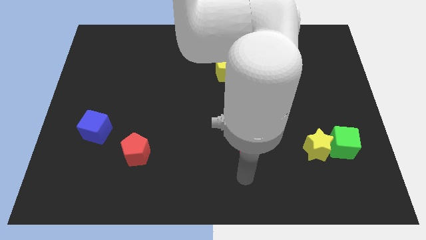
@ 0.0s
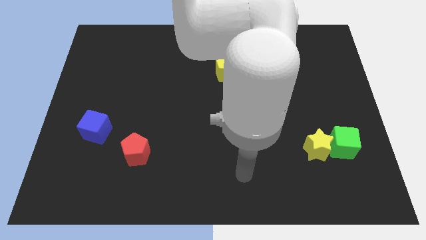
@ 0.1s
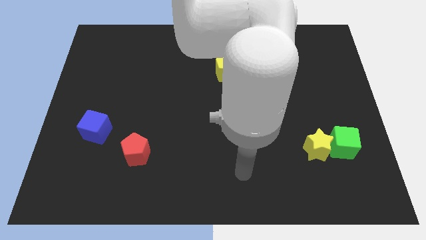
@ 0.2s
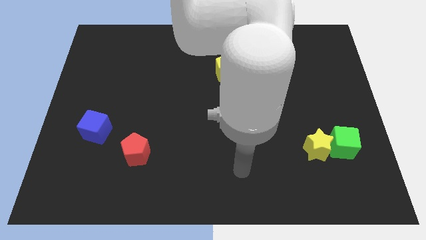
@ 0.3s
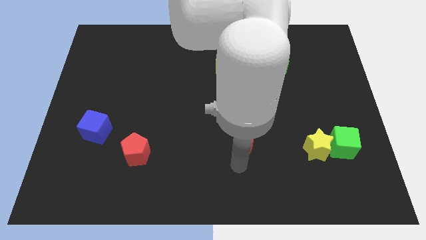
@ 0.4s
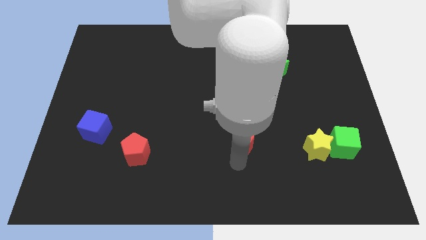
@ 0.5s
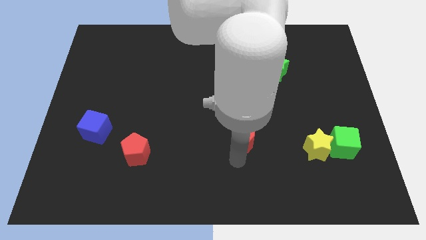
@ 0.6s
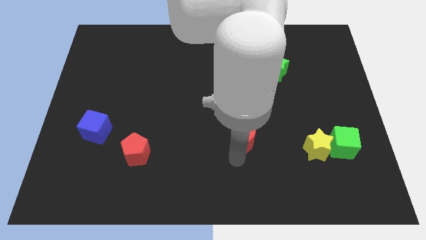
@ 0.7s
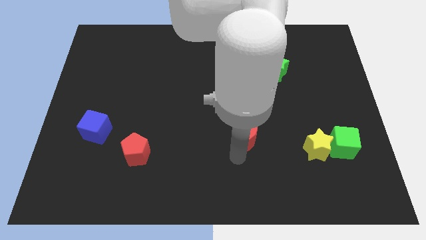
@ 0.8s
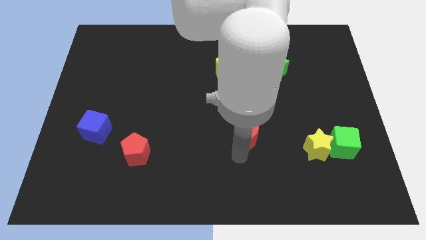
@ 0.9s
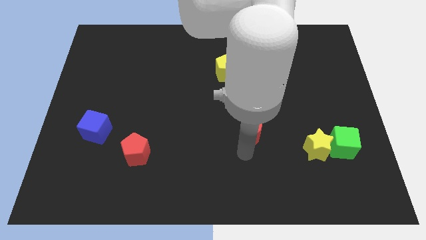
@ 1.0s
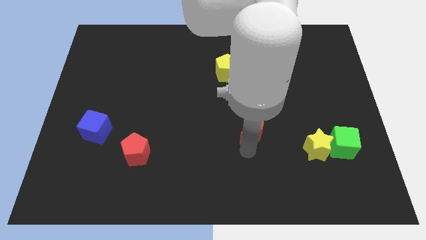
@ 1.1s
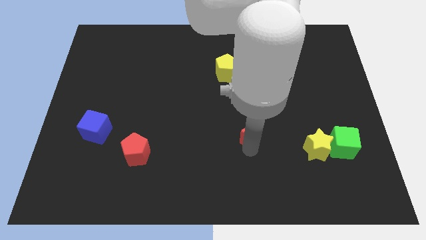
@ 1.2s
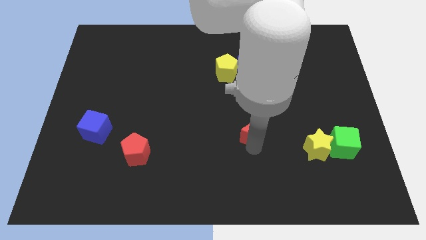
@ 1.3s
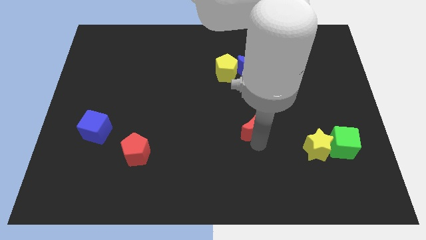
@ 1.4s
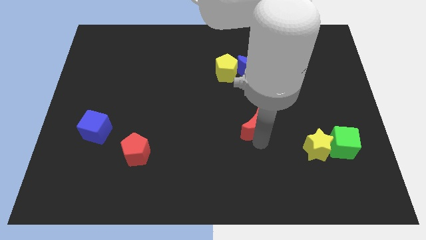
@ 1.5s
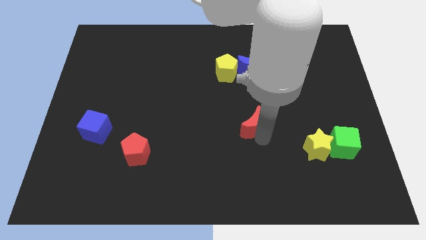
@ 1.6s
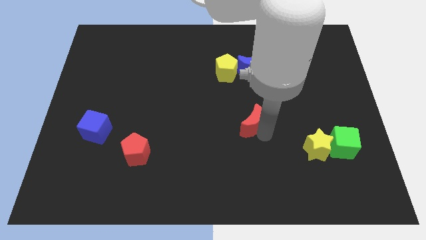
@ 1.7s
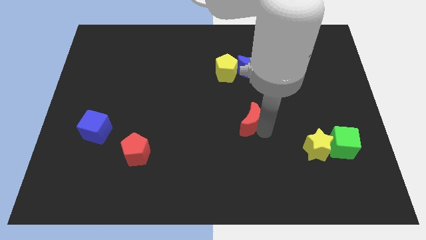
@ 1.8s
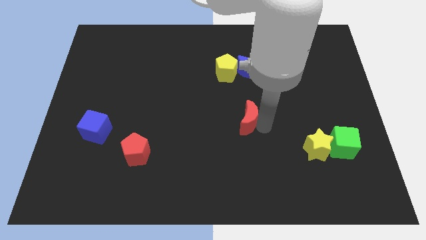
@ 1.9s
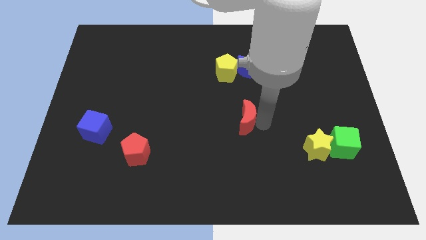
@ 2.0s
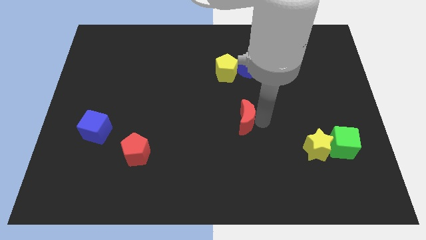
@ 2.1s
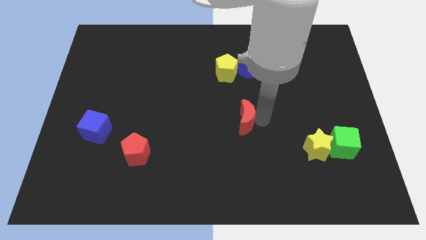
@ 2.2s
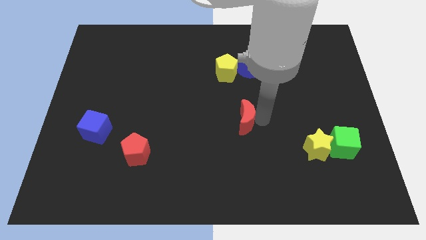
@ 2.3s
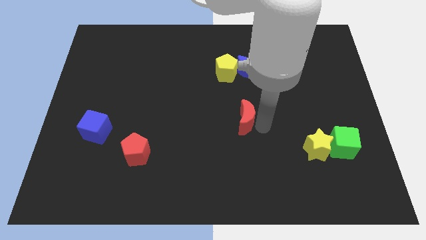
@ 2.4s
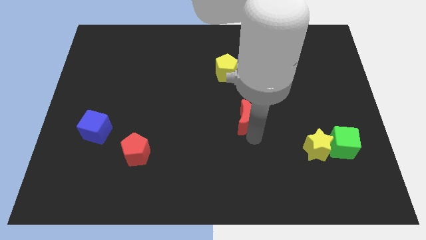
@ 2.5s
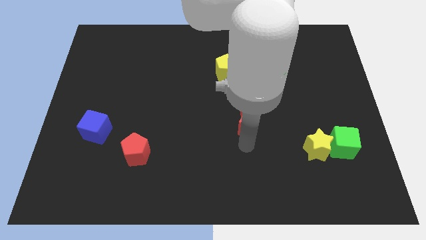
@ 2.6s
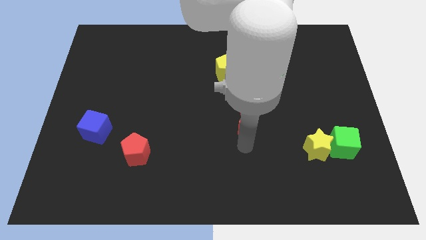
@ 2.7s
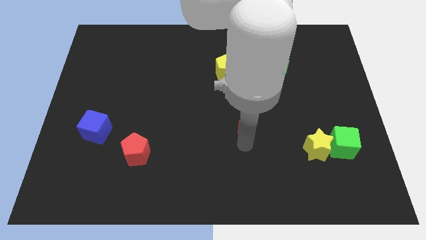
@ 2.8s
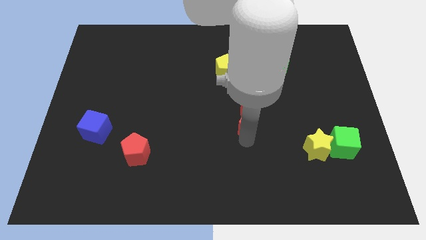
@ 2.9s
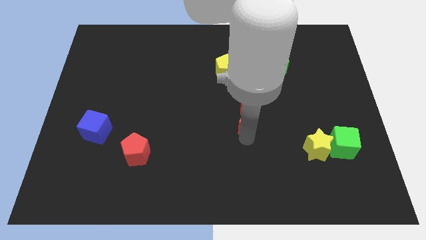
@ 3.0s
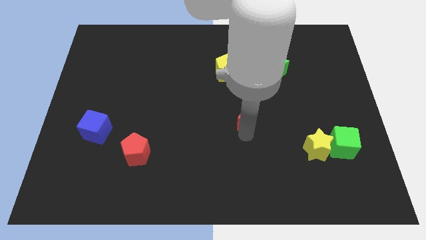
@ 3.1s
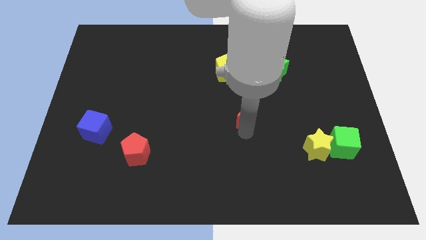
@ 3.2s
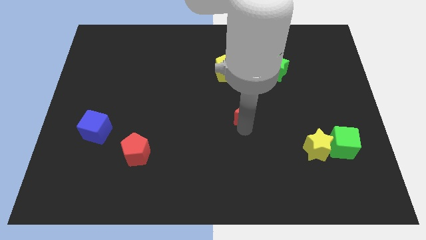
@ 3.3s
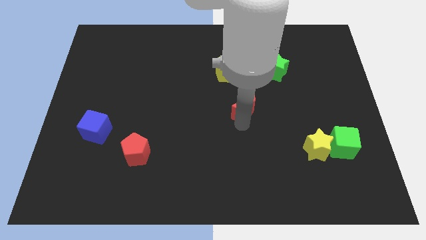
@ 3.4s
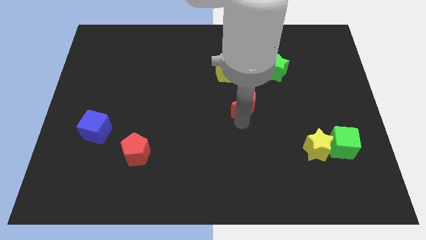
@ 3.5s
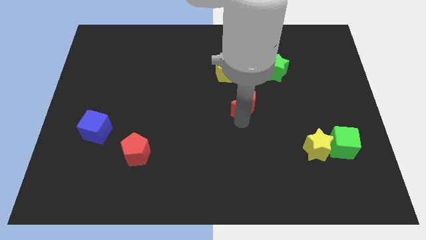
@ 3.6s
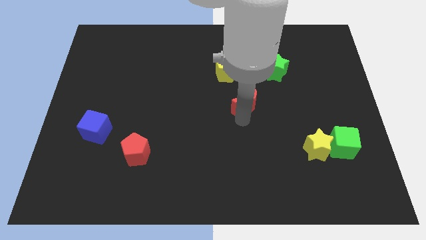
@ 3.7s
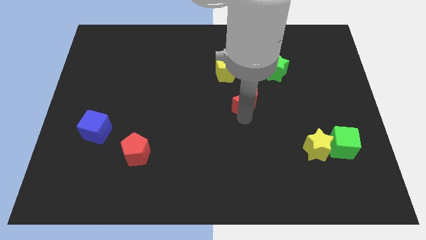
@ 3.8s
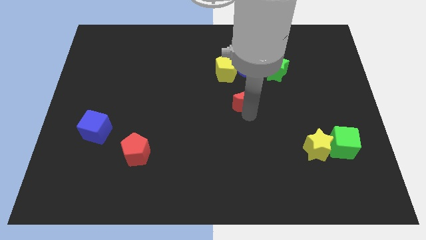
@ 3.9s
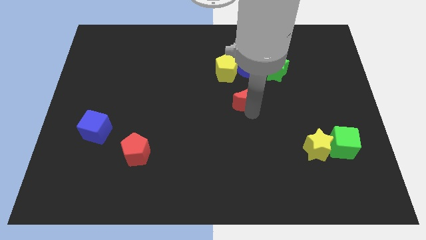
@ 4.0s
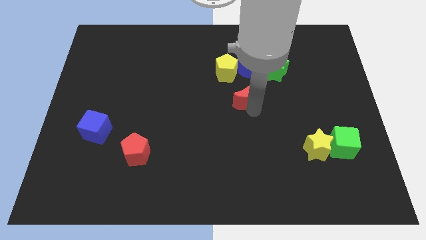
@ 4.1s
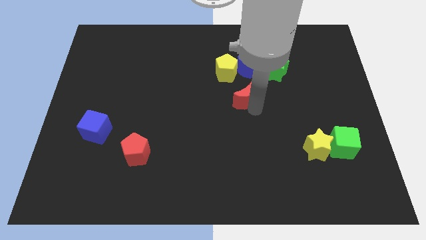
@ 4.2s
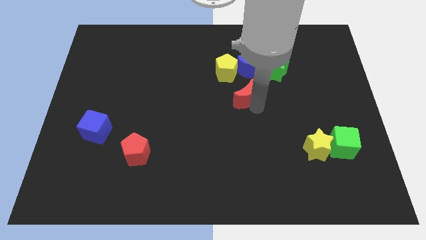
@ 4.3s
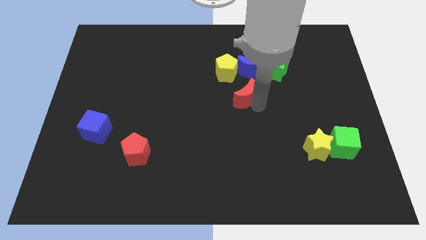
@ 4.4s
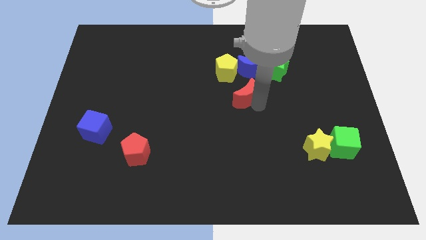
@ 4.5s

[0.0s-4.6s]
push the red moon to the bottom of the blue crescent

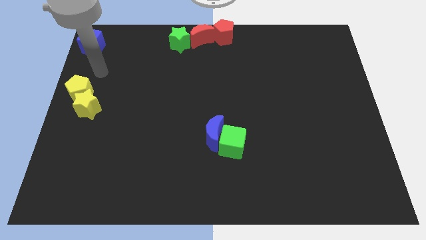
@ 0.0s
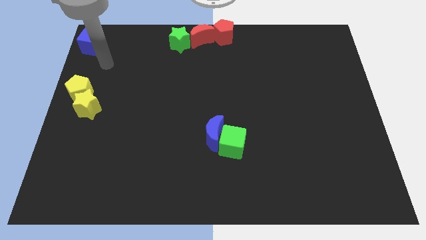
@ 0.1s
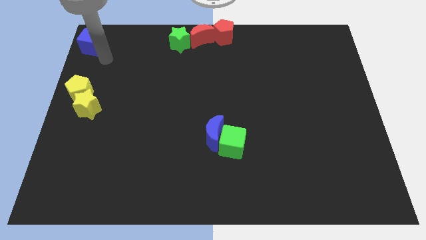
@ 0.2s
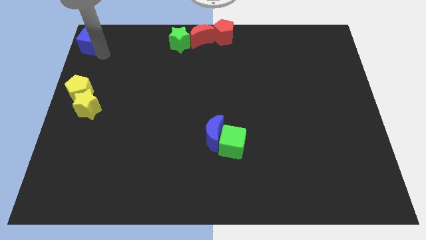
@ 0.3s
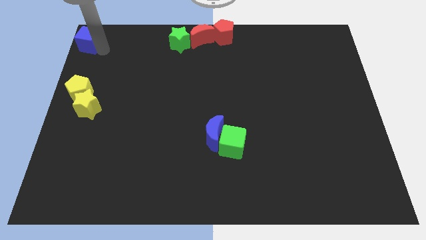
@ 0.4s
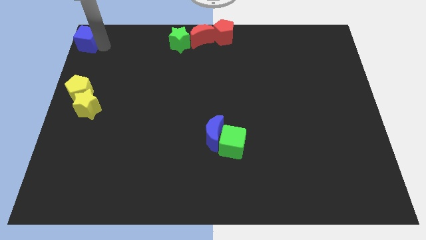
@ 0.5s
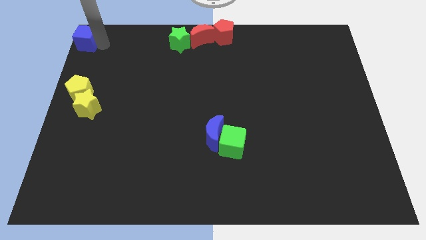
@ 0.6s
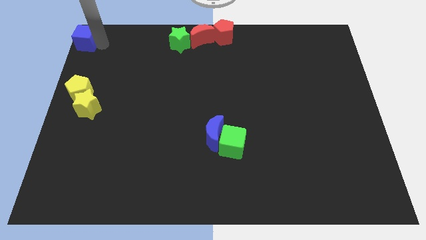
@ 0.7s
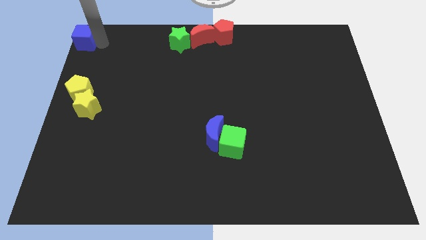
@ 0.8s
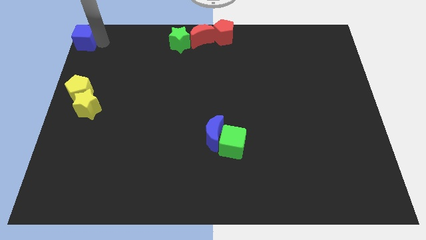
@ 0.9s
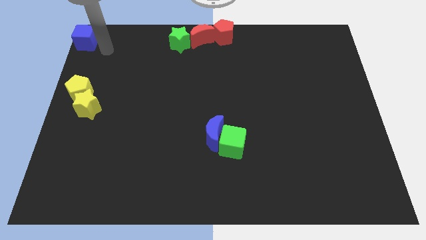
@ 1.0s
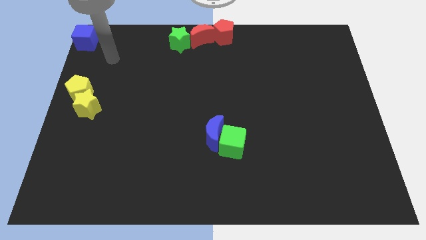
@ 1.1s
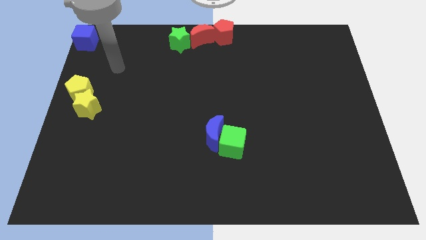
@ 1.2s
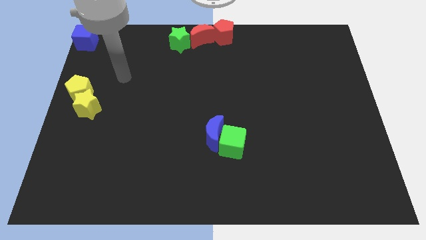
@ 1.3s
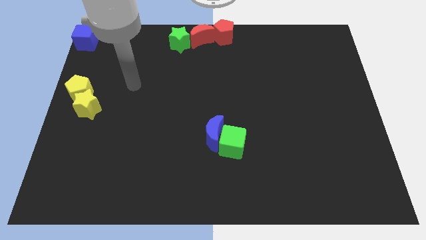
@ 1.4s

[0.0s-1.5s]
move the blue cube to the top left corner of the board

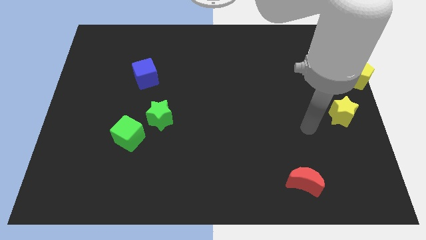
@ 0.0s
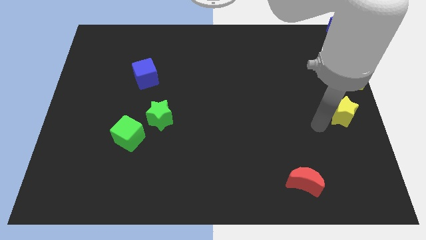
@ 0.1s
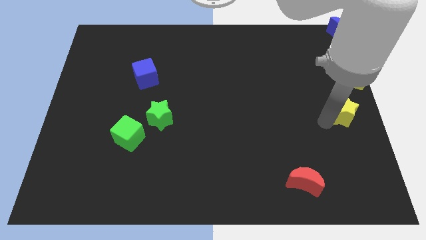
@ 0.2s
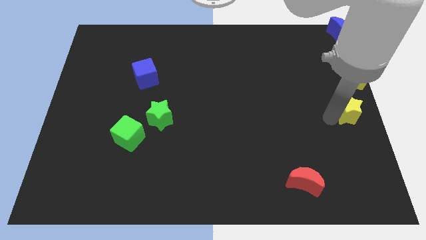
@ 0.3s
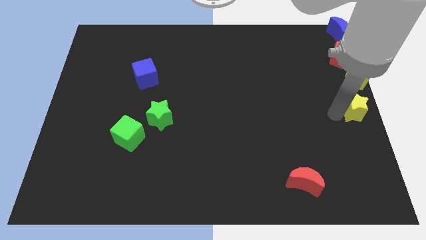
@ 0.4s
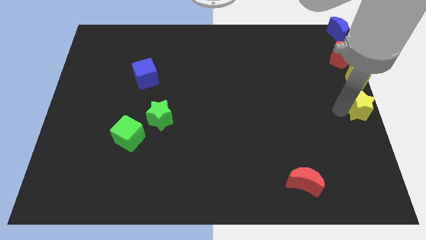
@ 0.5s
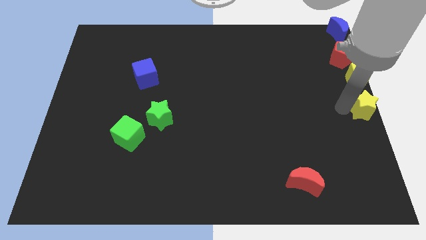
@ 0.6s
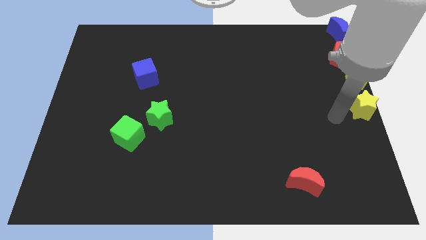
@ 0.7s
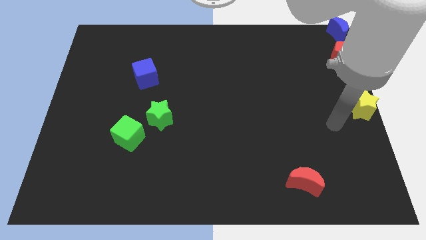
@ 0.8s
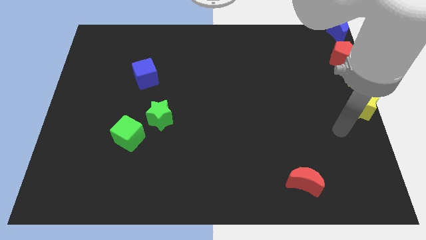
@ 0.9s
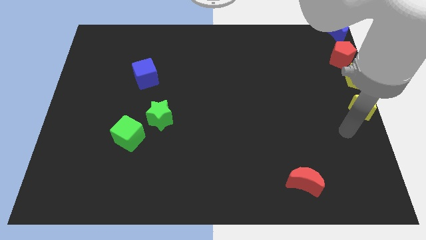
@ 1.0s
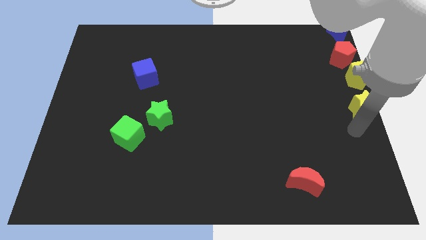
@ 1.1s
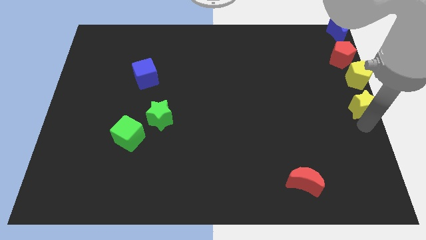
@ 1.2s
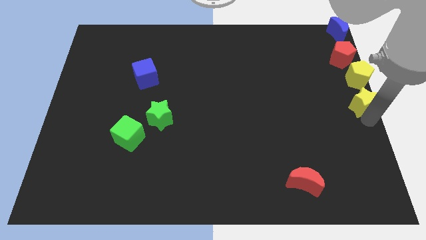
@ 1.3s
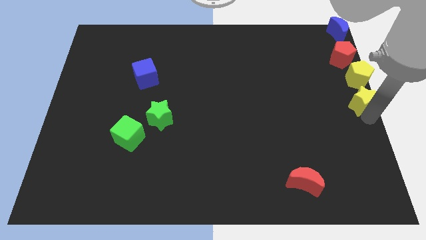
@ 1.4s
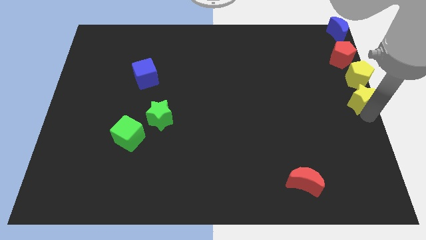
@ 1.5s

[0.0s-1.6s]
push the yellow star below the yellow penatgon

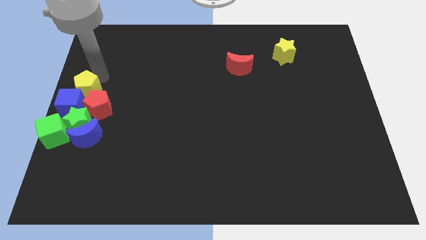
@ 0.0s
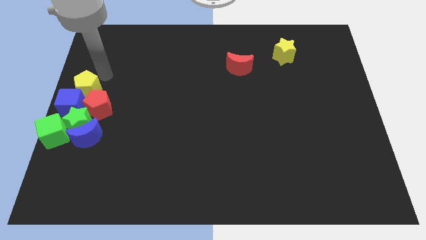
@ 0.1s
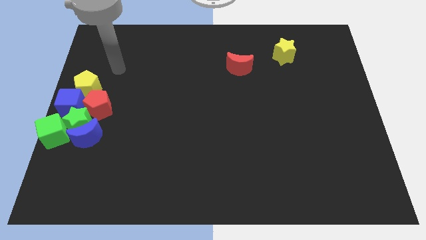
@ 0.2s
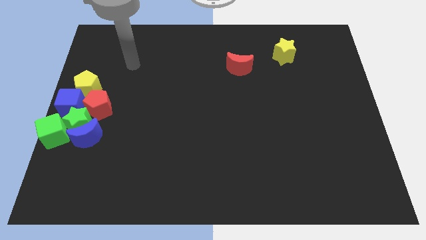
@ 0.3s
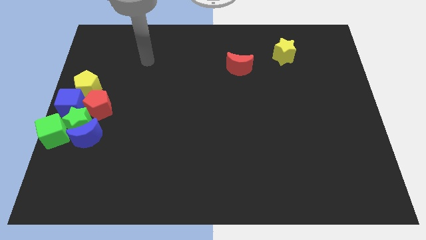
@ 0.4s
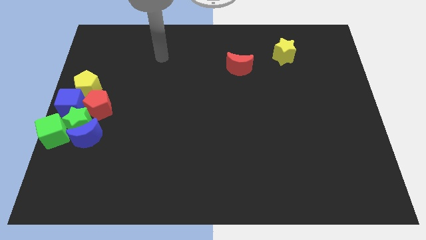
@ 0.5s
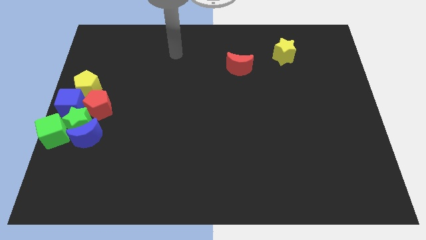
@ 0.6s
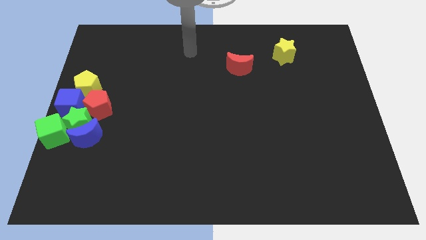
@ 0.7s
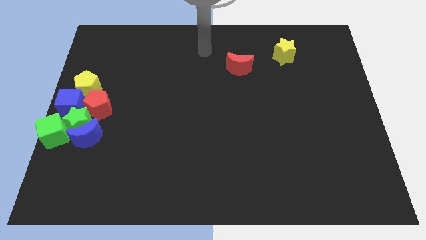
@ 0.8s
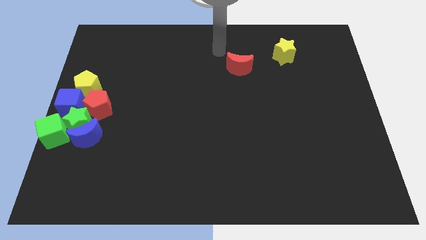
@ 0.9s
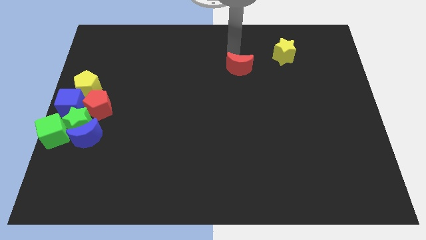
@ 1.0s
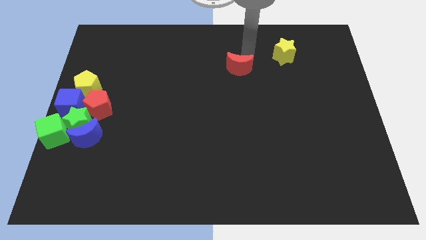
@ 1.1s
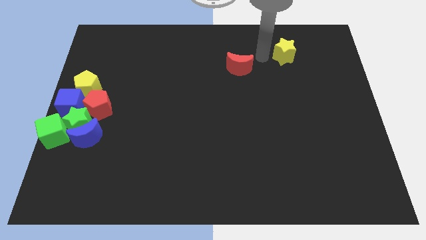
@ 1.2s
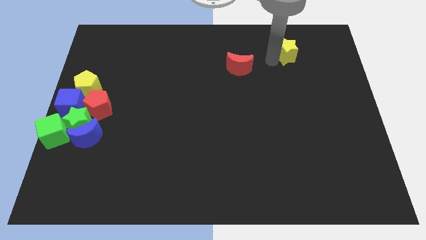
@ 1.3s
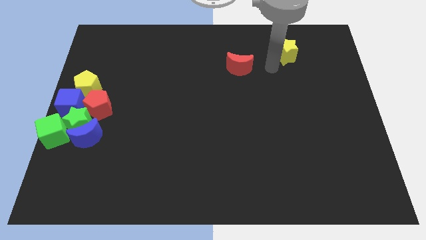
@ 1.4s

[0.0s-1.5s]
touch the left side of the yellow star
